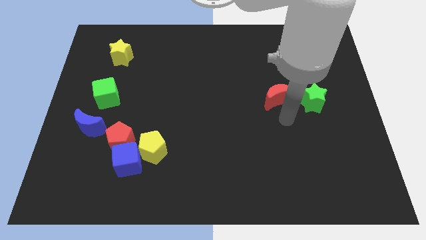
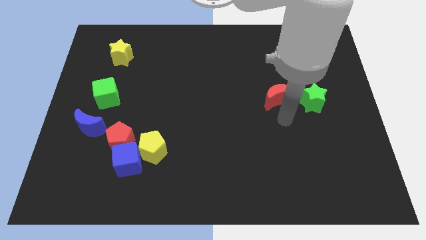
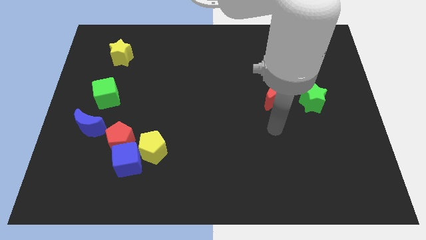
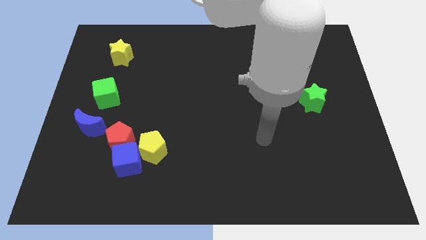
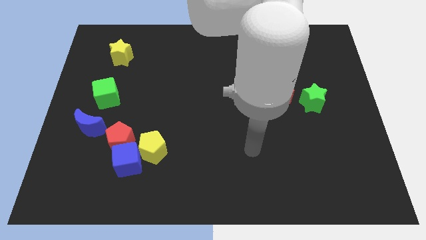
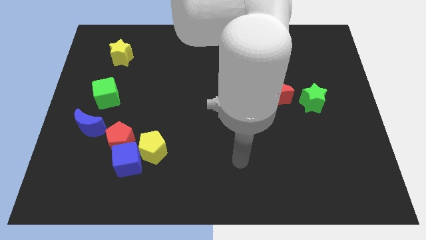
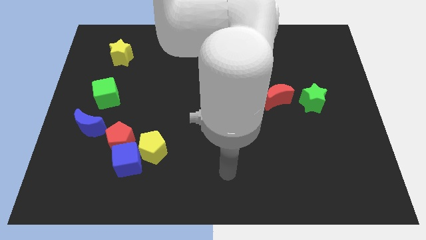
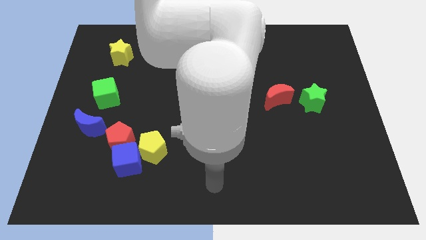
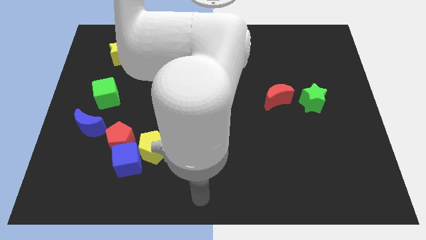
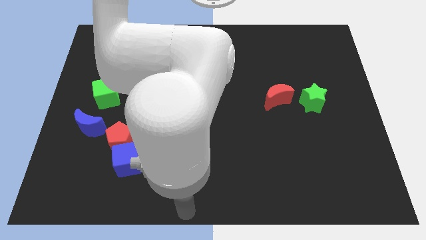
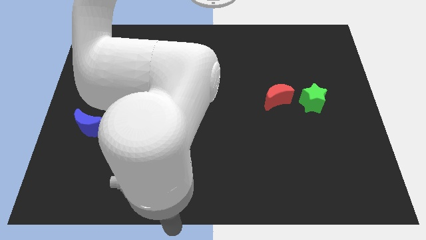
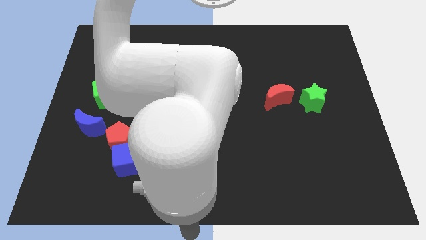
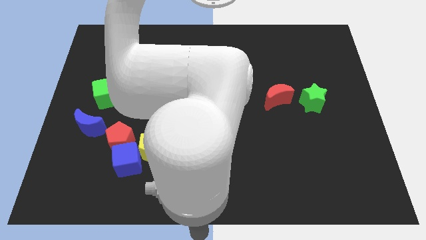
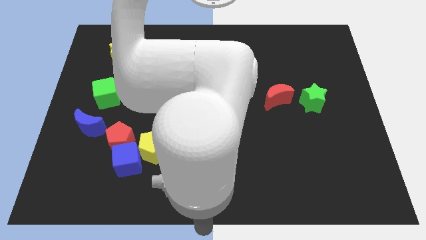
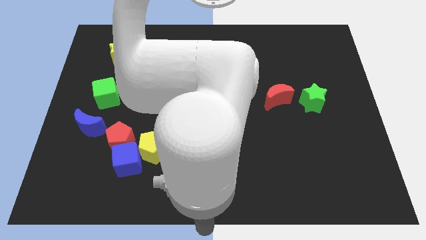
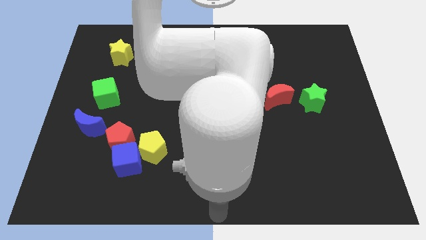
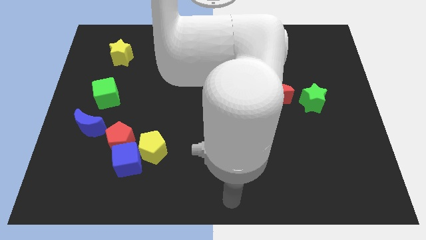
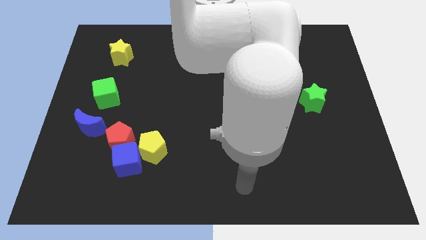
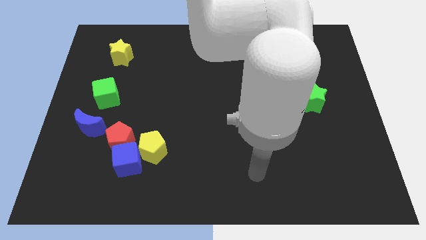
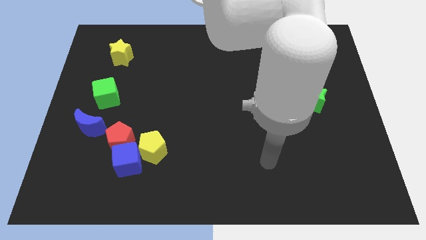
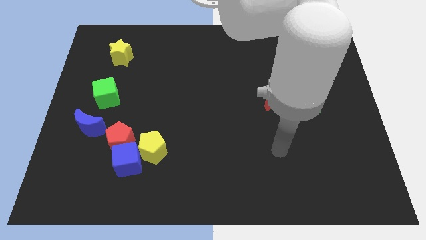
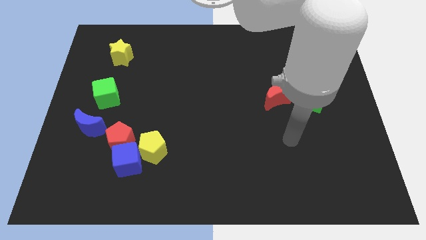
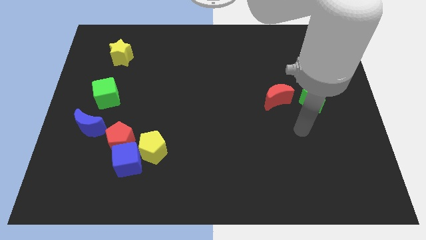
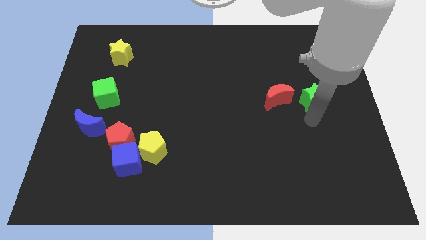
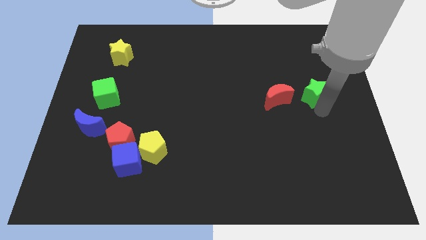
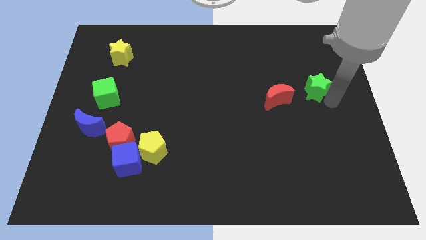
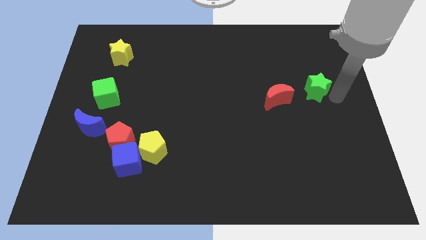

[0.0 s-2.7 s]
go and touch the bottom side of the green star

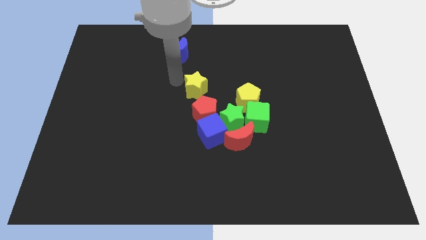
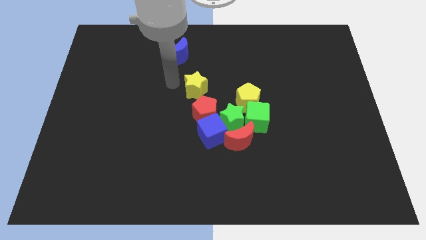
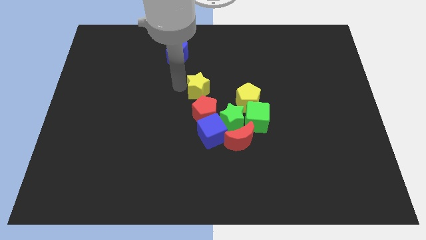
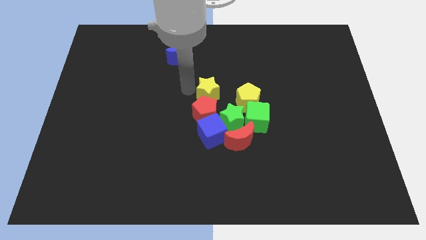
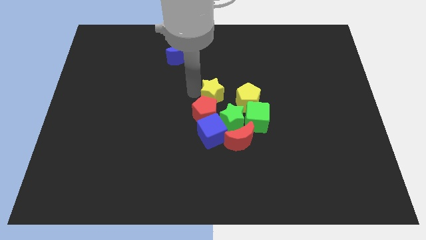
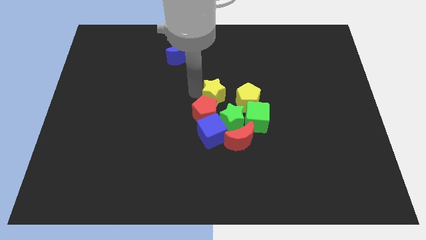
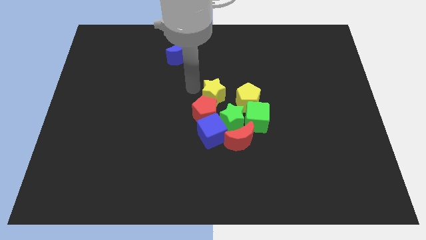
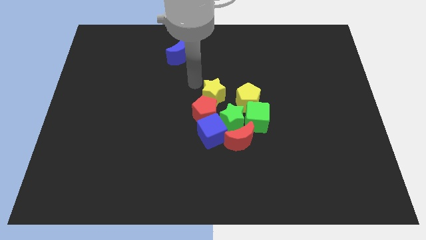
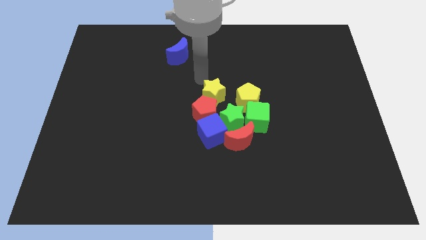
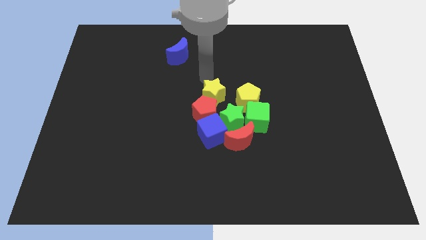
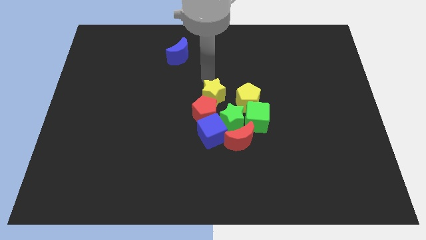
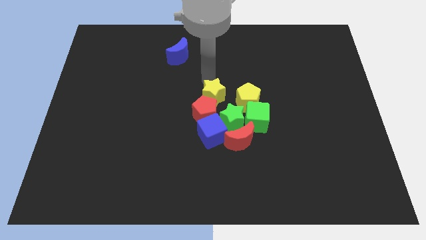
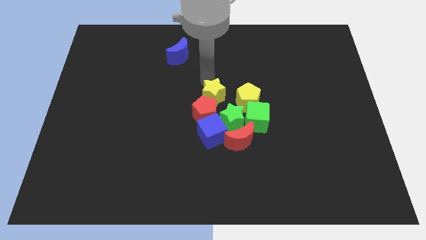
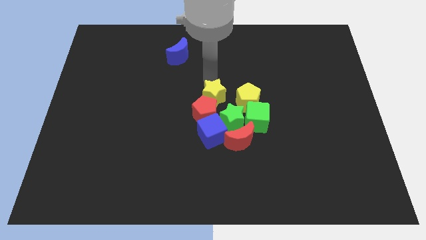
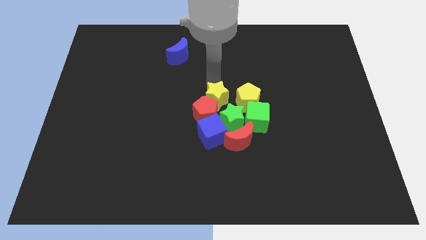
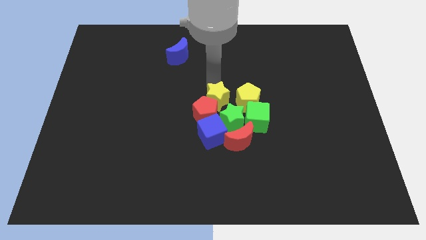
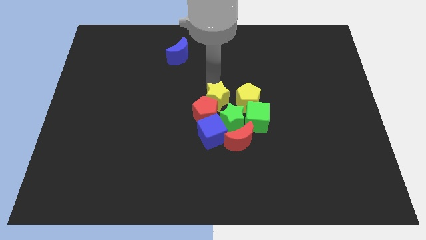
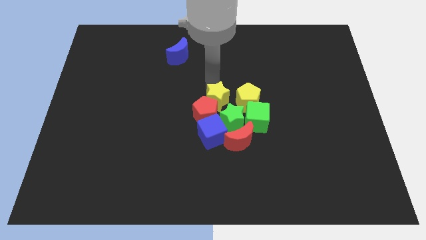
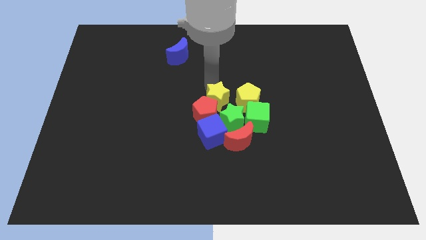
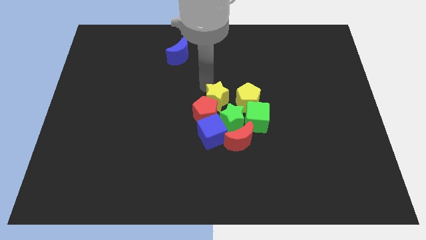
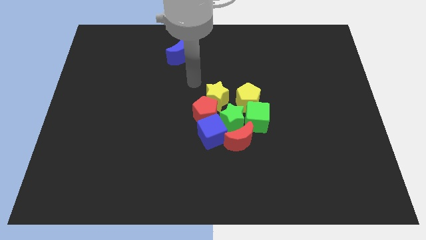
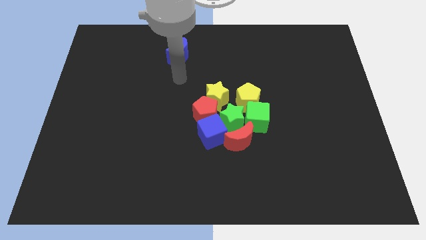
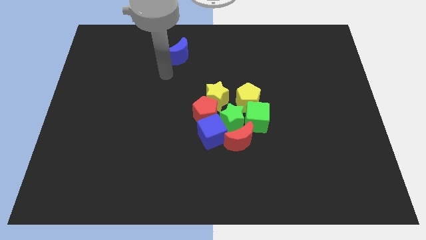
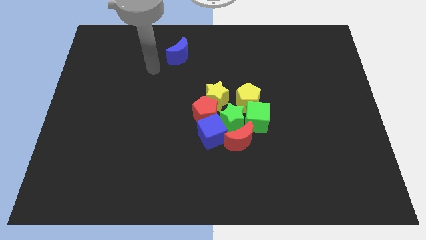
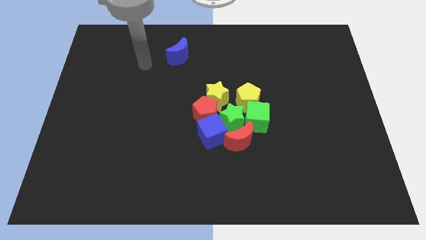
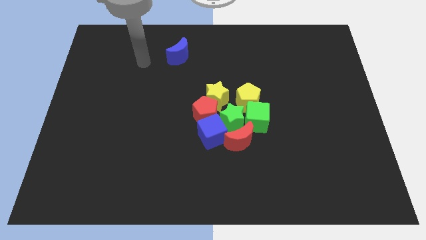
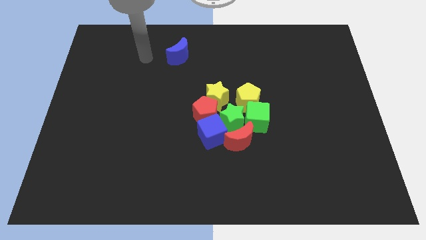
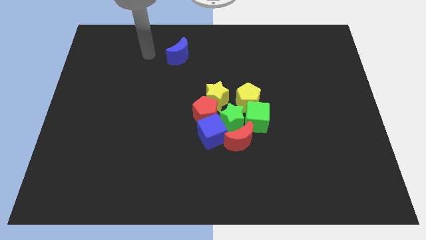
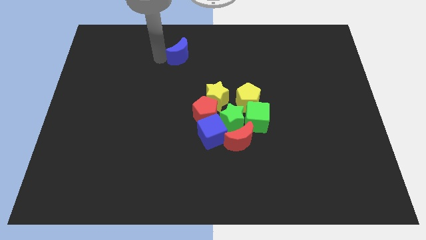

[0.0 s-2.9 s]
push the yellow star on top of the red pentagon

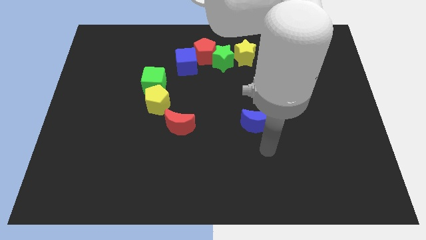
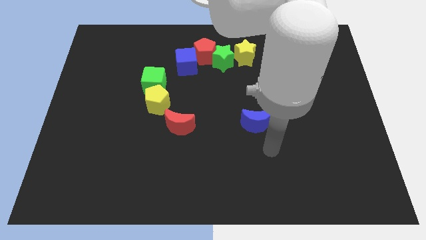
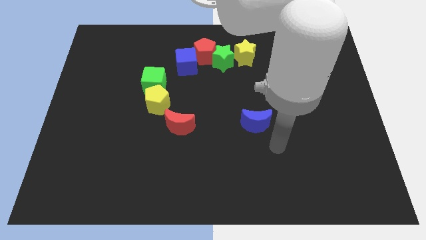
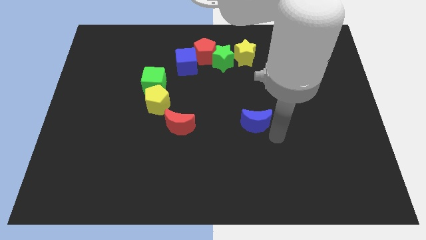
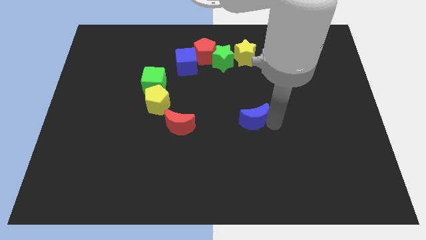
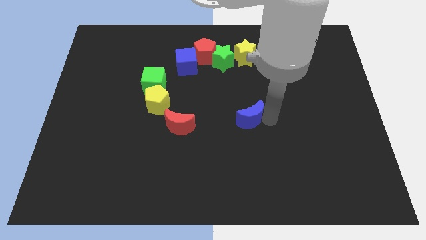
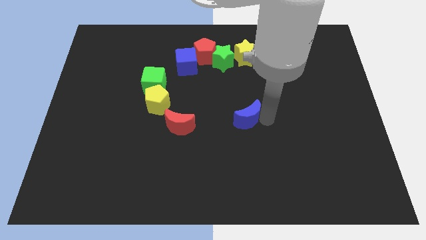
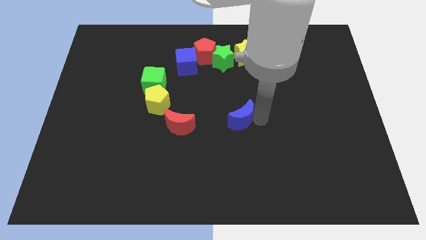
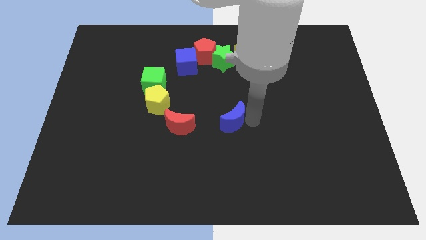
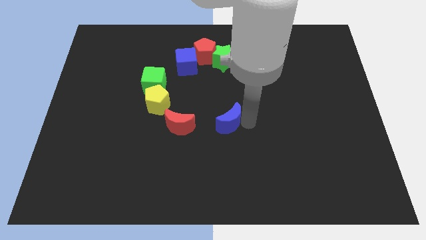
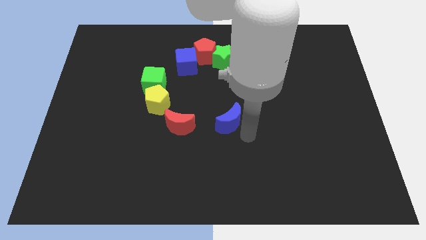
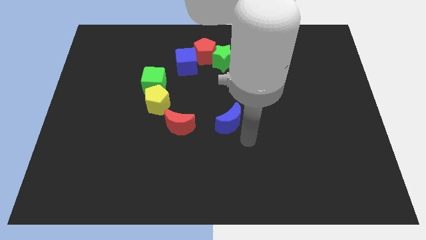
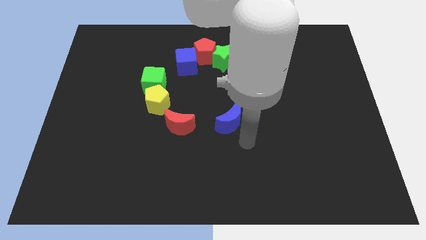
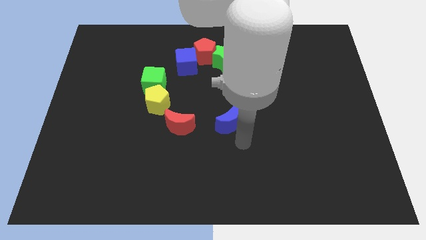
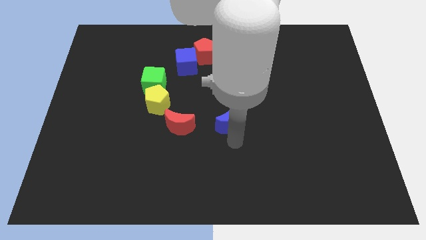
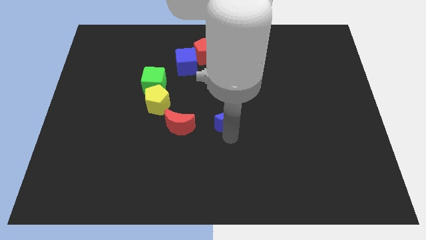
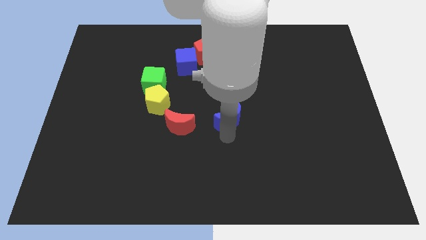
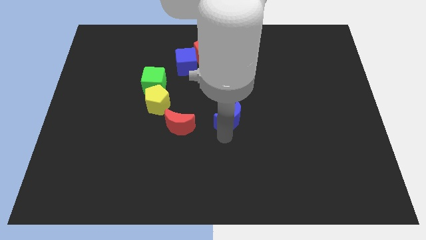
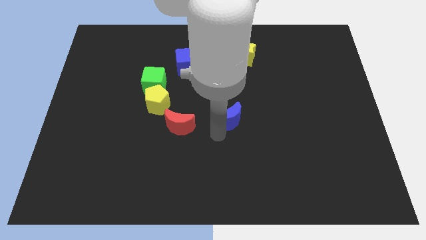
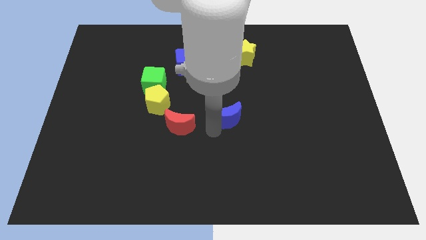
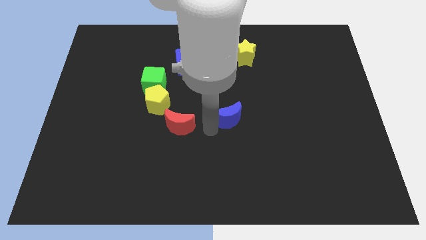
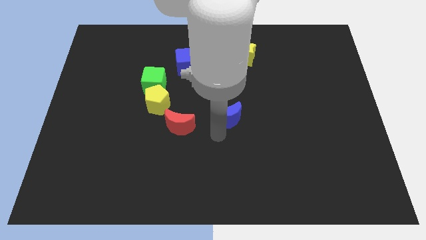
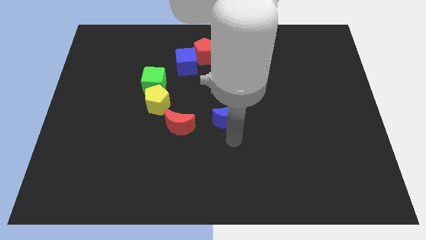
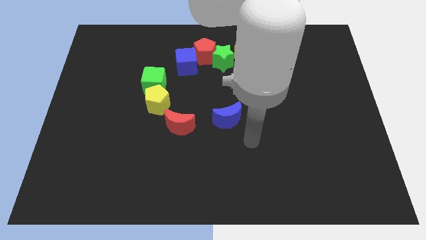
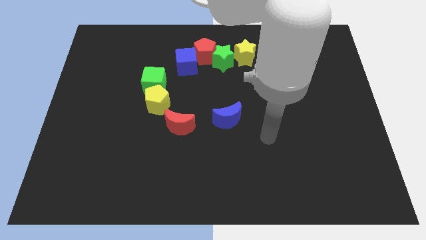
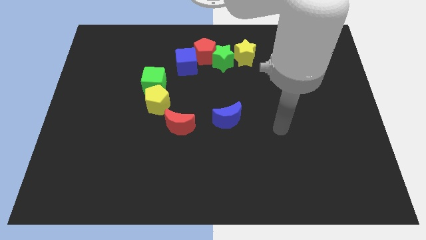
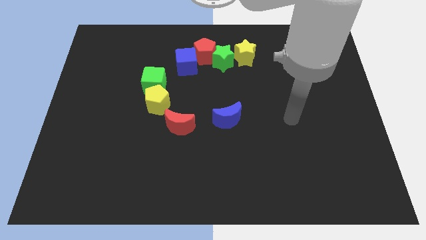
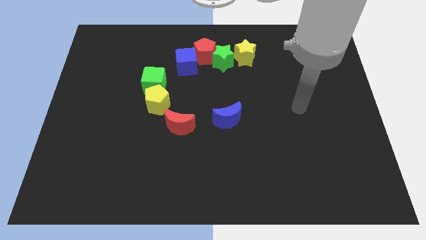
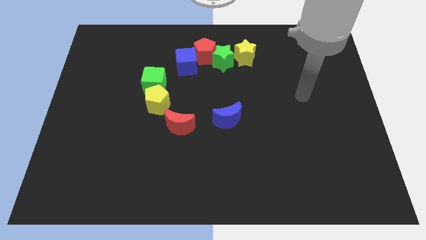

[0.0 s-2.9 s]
move the blue moon towards the right to the red moon

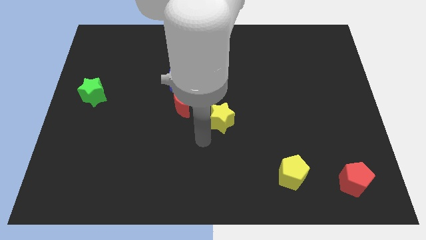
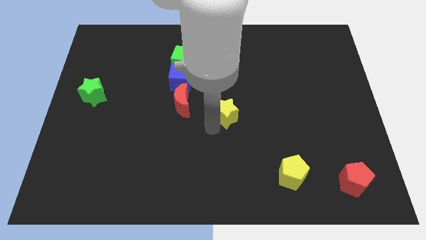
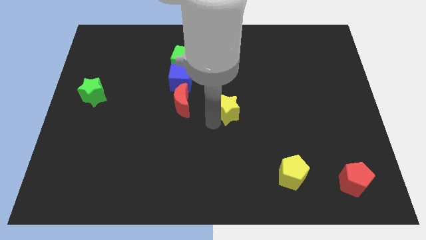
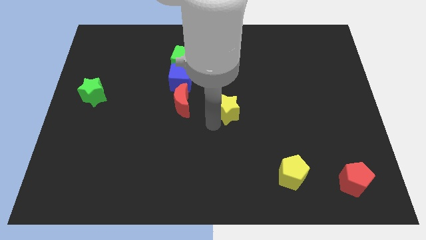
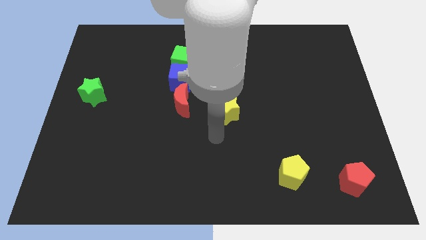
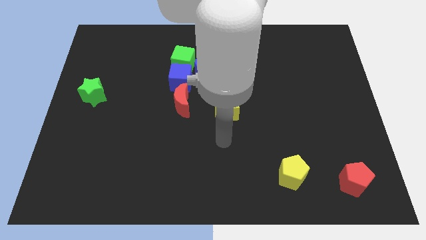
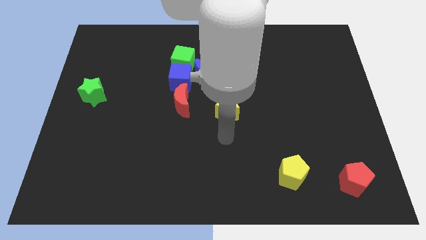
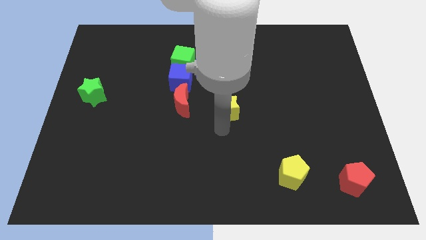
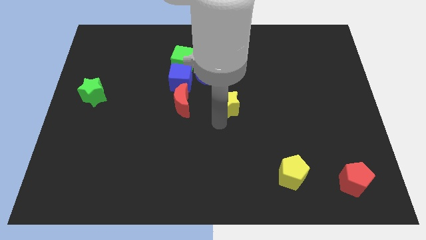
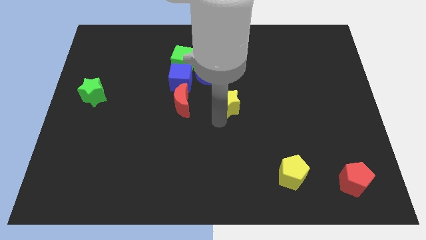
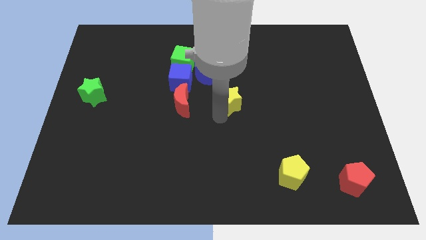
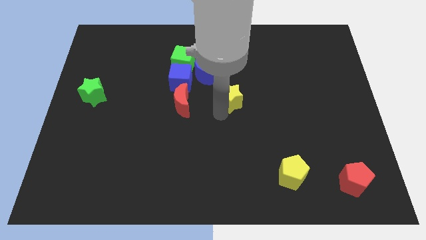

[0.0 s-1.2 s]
put the yellow star horizontally to the right side of the red moon
